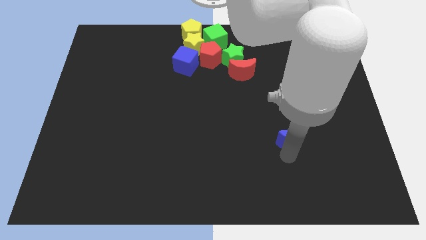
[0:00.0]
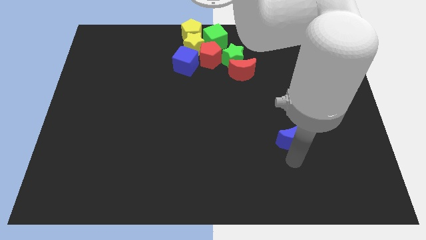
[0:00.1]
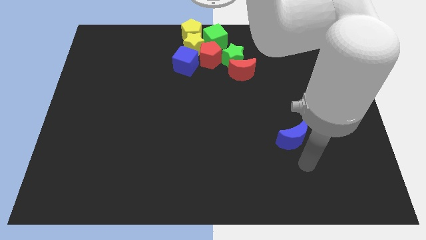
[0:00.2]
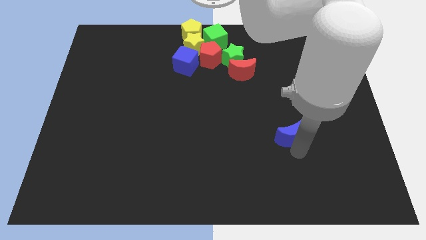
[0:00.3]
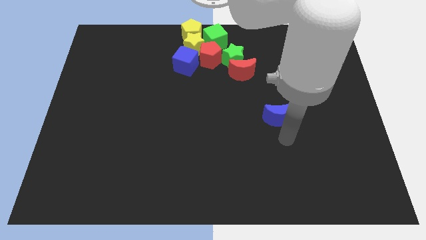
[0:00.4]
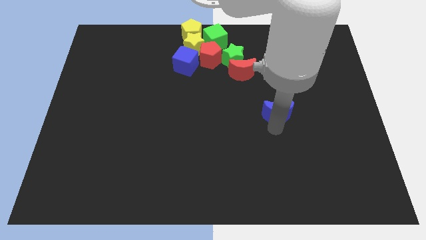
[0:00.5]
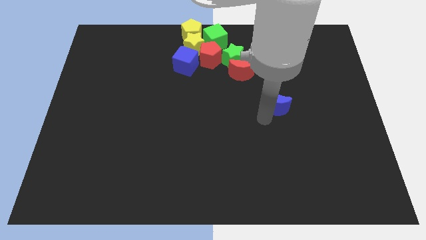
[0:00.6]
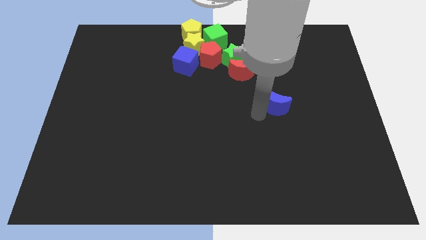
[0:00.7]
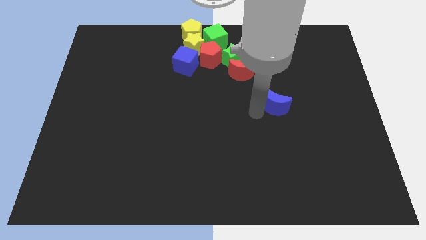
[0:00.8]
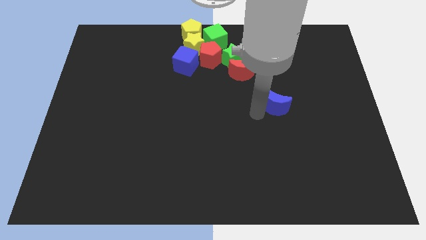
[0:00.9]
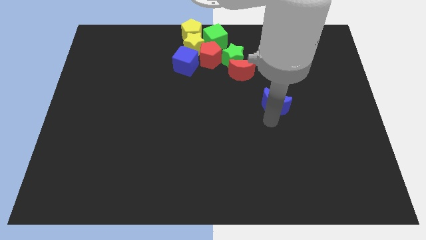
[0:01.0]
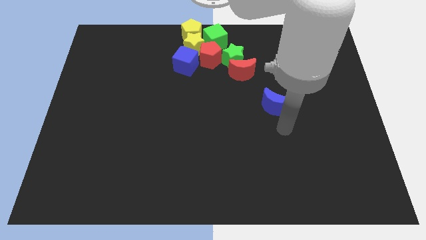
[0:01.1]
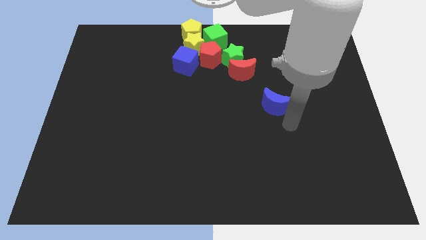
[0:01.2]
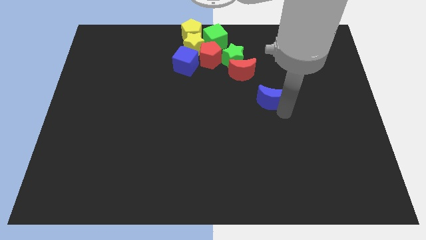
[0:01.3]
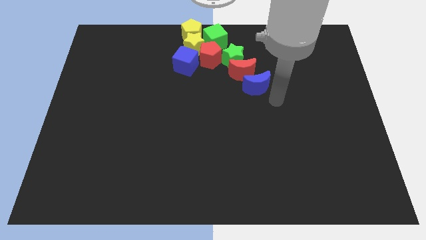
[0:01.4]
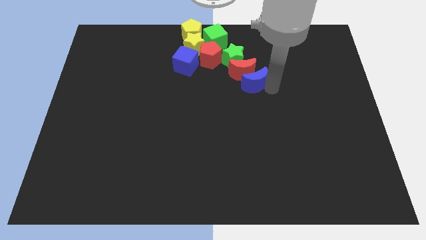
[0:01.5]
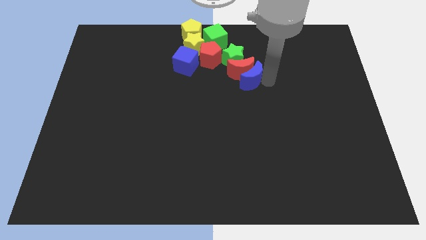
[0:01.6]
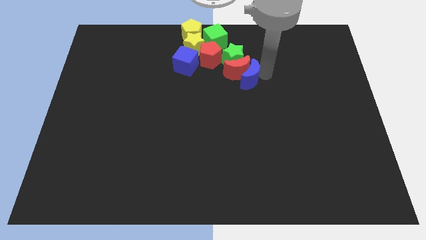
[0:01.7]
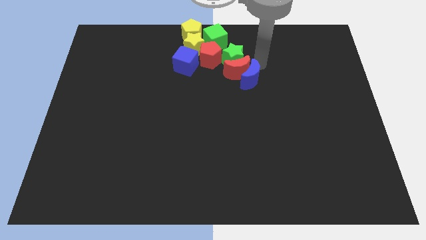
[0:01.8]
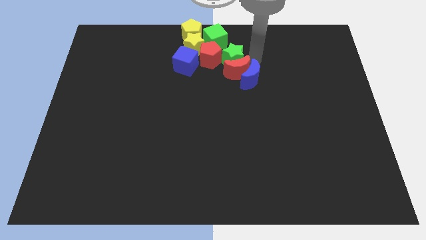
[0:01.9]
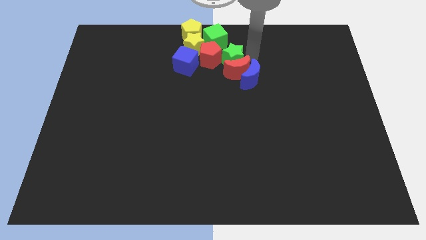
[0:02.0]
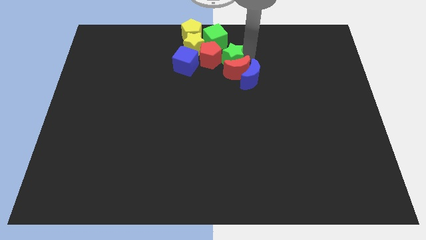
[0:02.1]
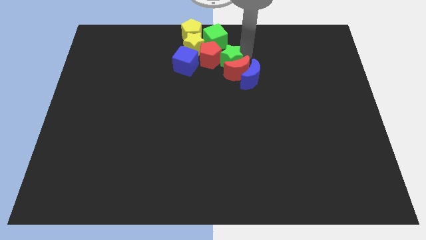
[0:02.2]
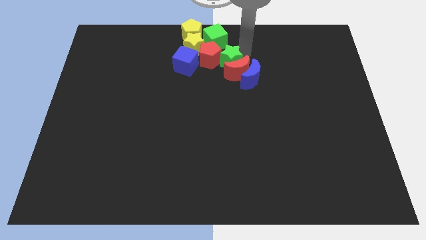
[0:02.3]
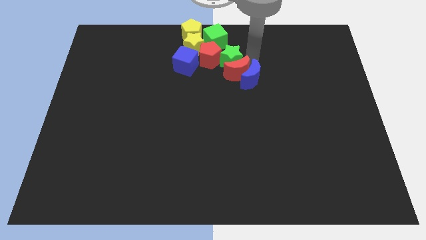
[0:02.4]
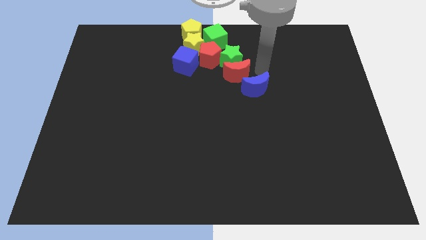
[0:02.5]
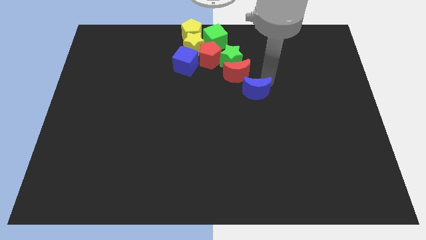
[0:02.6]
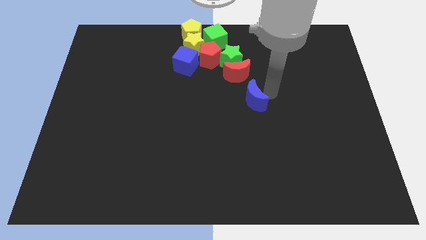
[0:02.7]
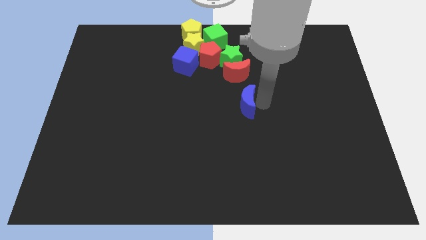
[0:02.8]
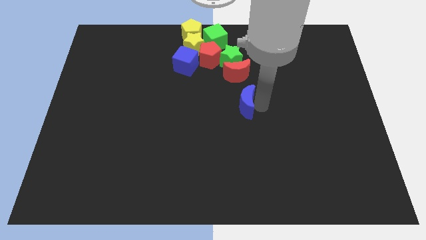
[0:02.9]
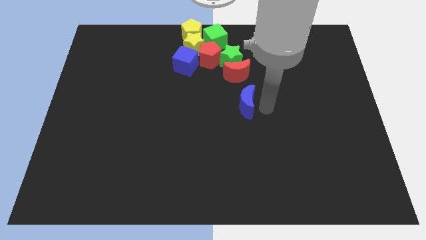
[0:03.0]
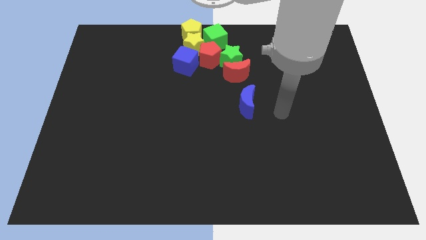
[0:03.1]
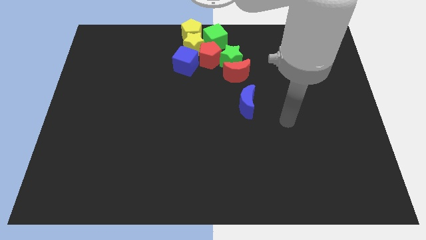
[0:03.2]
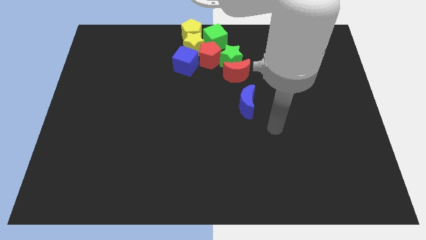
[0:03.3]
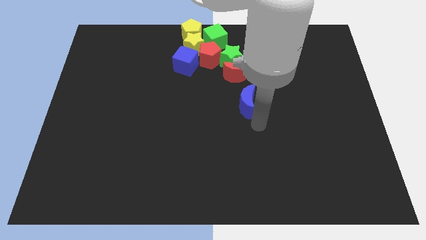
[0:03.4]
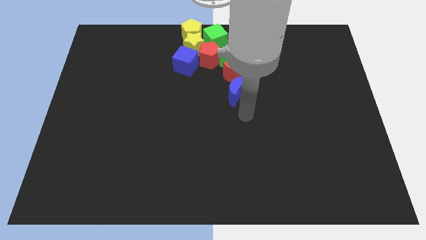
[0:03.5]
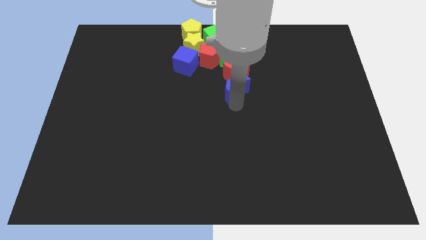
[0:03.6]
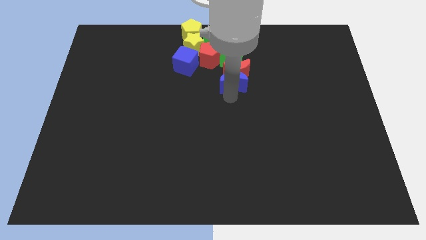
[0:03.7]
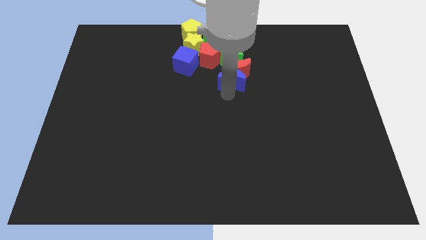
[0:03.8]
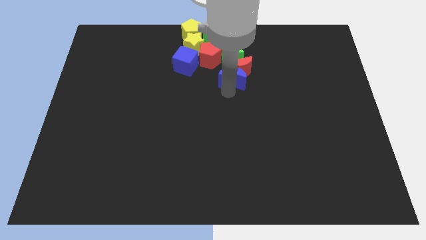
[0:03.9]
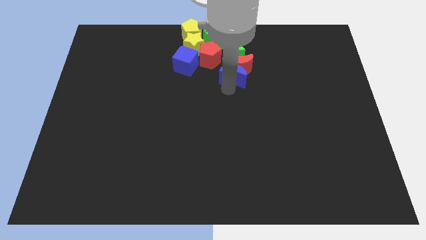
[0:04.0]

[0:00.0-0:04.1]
touch blue crescent into the red crescent

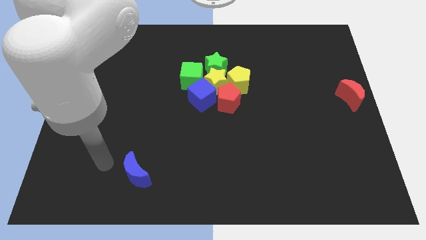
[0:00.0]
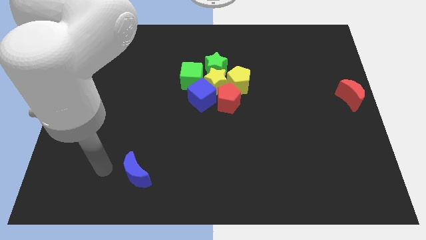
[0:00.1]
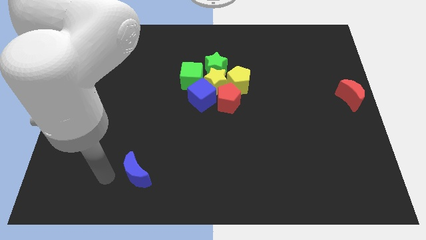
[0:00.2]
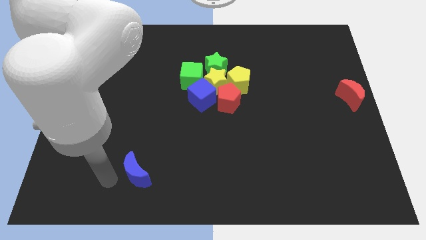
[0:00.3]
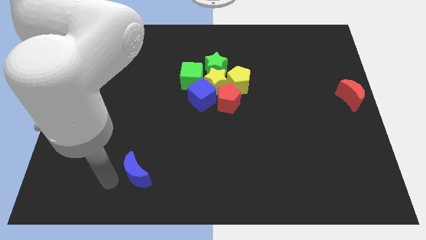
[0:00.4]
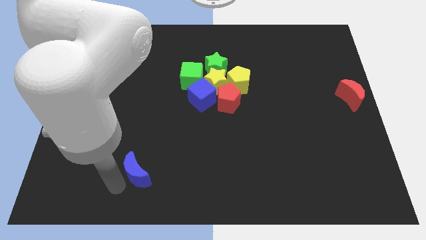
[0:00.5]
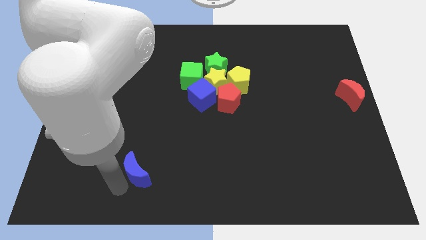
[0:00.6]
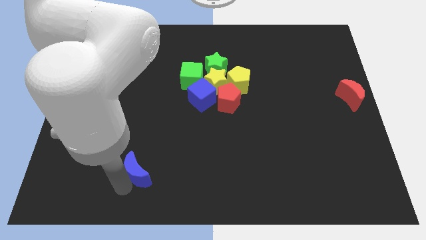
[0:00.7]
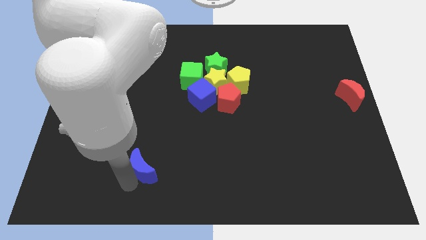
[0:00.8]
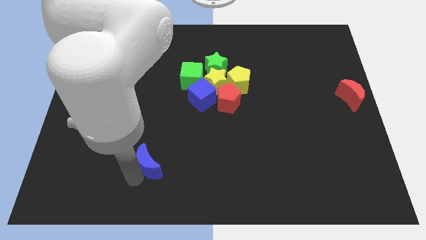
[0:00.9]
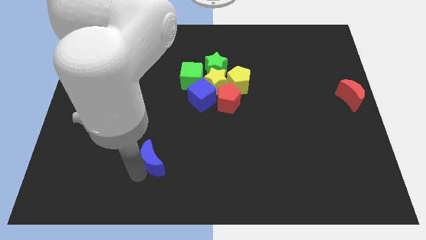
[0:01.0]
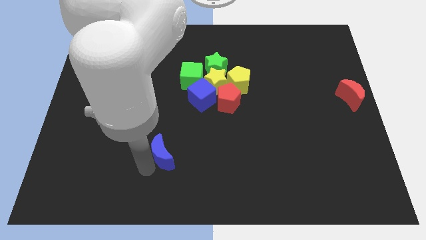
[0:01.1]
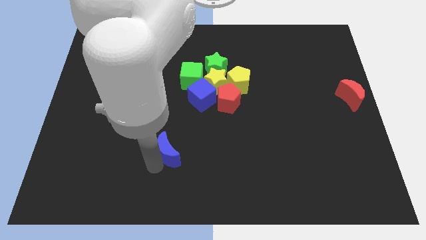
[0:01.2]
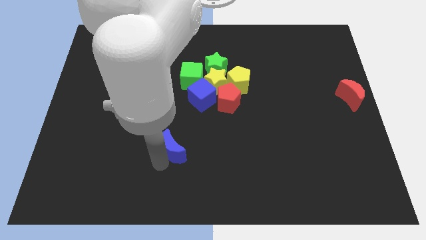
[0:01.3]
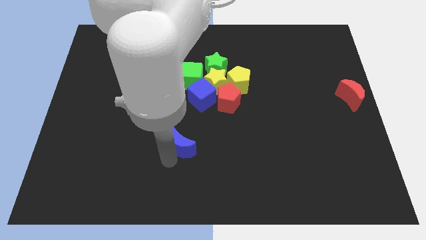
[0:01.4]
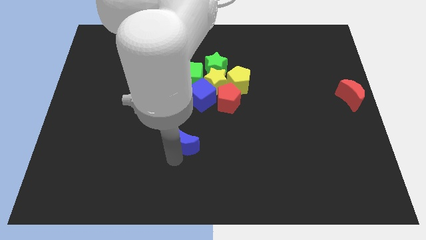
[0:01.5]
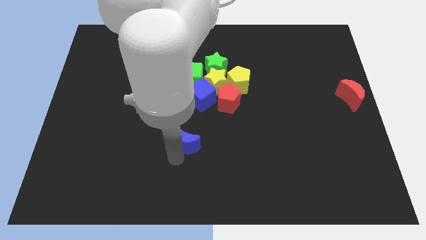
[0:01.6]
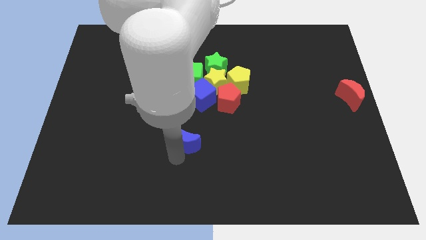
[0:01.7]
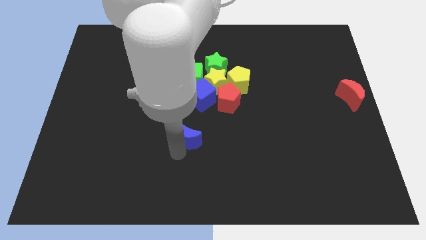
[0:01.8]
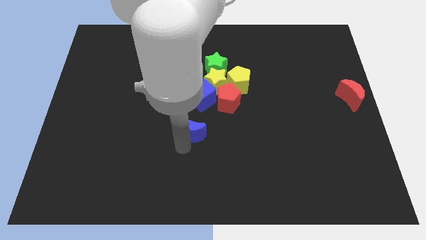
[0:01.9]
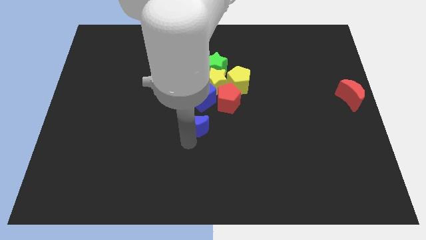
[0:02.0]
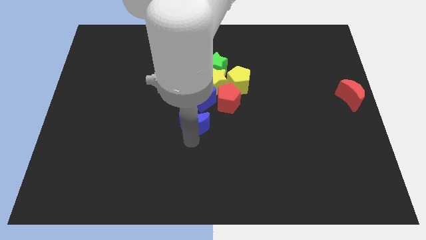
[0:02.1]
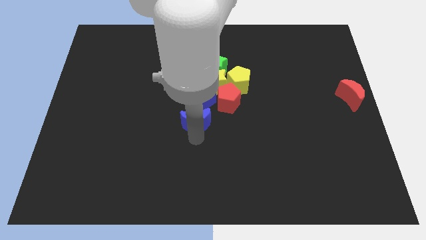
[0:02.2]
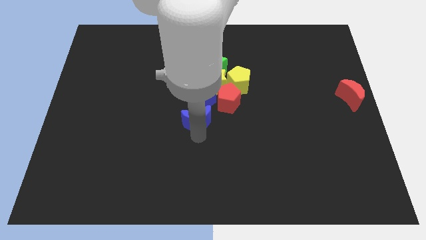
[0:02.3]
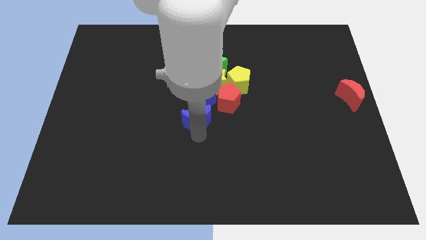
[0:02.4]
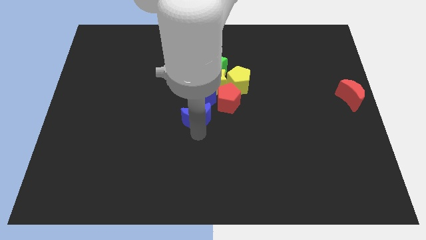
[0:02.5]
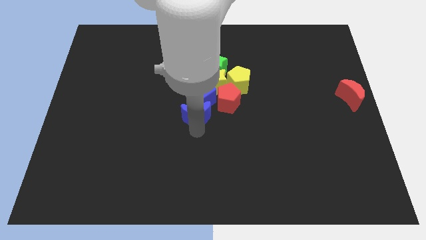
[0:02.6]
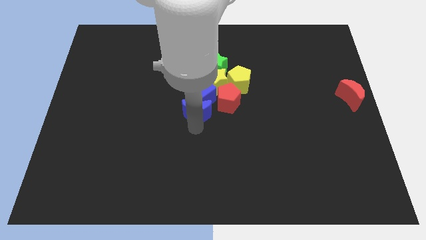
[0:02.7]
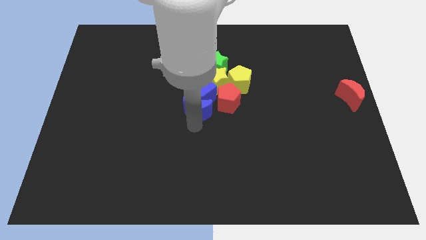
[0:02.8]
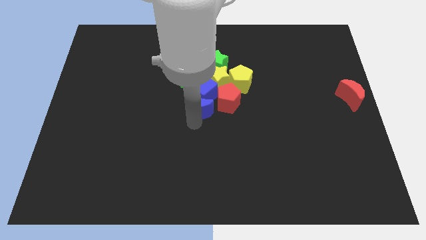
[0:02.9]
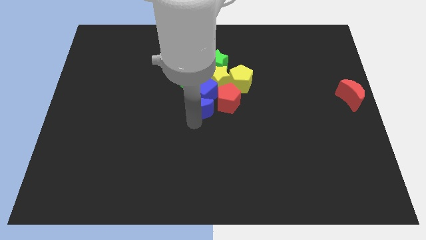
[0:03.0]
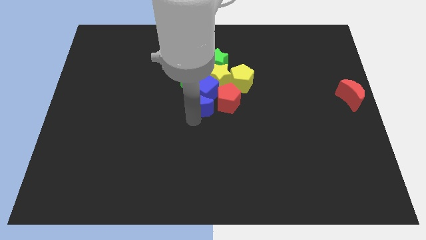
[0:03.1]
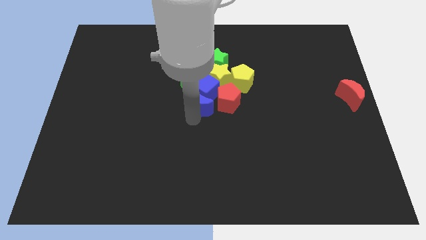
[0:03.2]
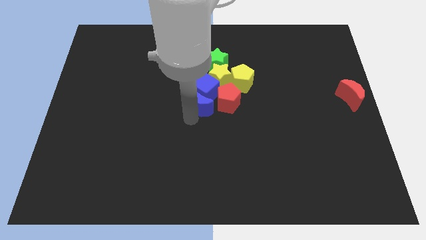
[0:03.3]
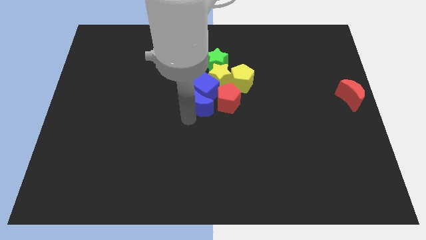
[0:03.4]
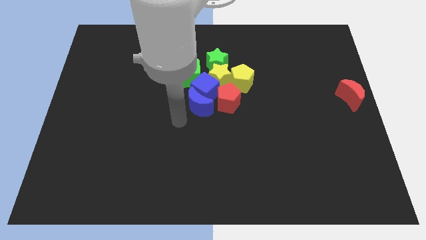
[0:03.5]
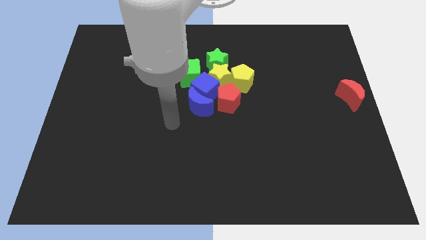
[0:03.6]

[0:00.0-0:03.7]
push the blue moon into the group of blocks

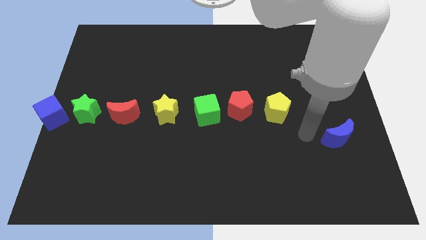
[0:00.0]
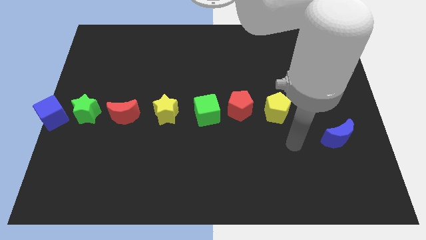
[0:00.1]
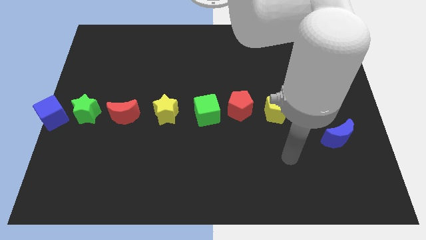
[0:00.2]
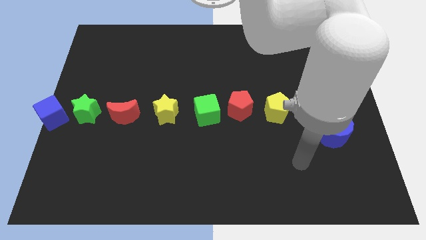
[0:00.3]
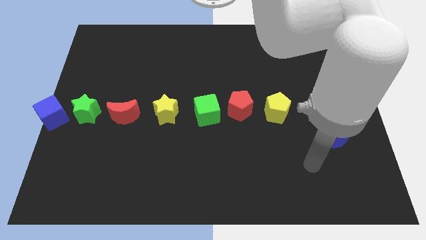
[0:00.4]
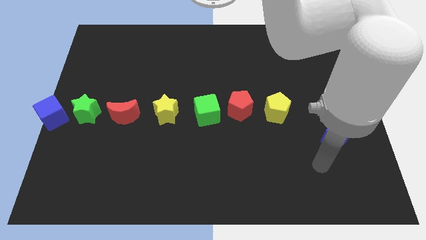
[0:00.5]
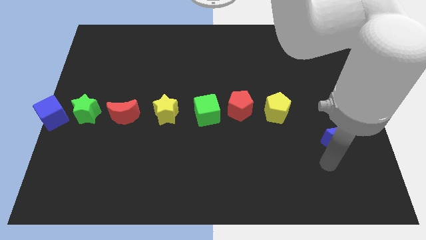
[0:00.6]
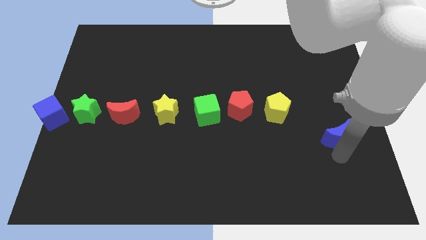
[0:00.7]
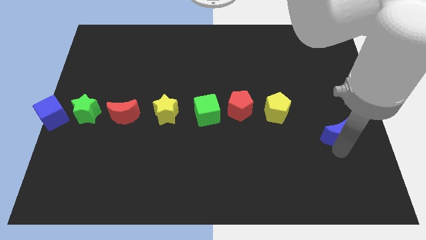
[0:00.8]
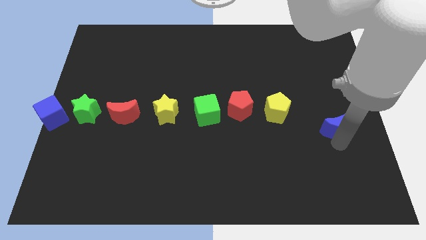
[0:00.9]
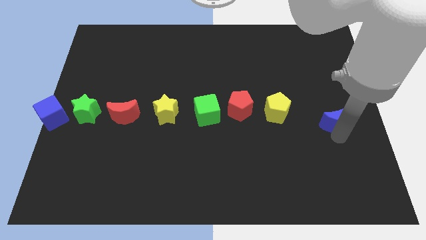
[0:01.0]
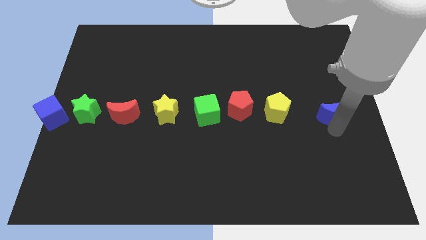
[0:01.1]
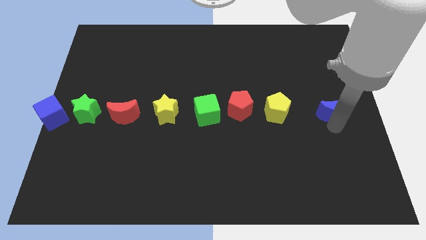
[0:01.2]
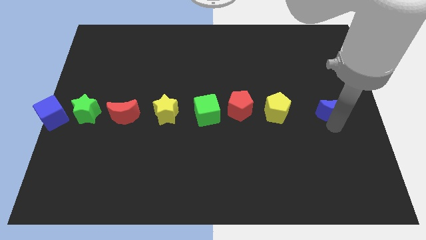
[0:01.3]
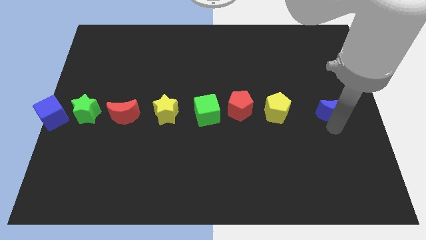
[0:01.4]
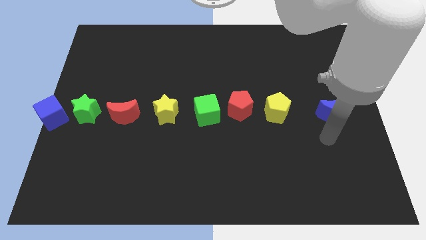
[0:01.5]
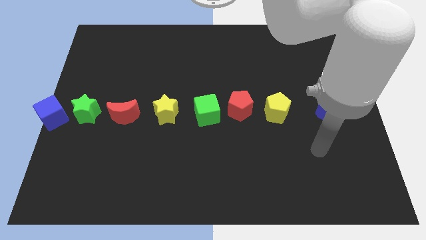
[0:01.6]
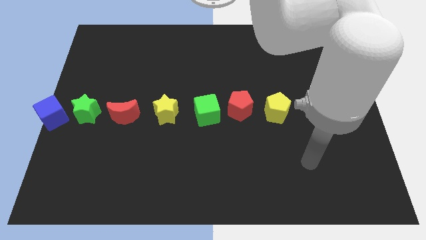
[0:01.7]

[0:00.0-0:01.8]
push the blue moon to the right of the yellow pentagon
